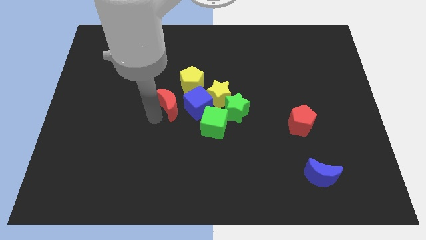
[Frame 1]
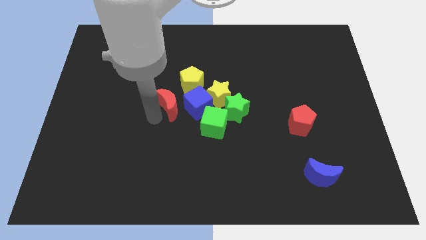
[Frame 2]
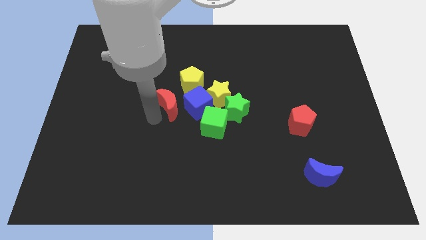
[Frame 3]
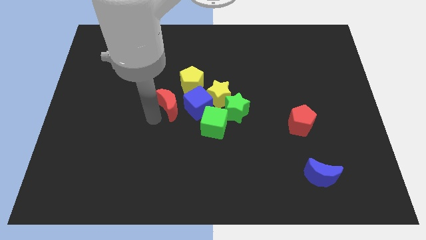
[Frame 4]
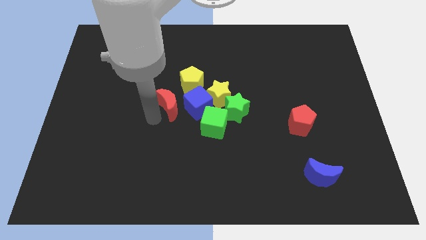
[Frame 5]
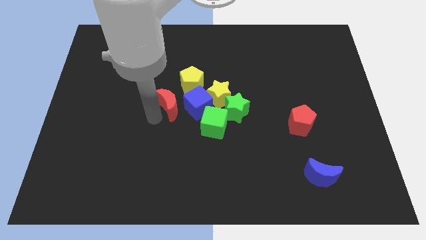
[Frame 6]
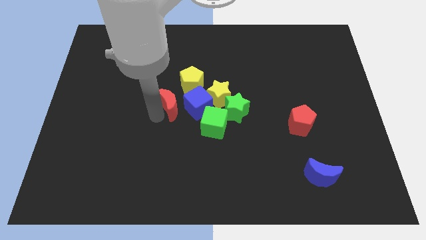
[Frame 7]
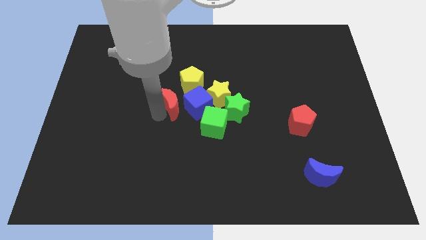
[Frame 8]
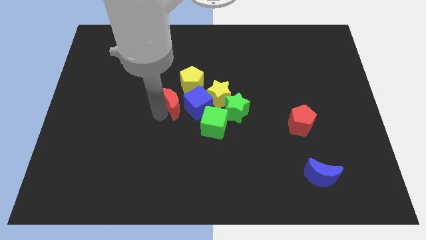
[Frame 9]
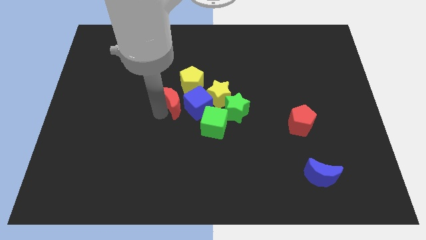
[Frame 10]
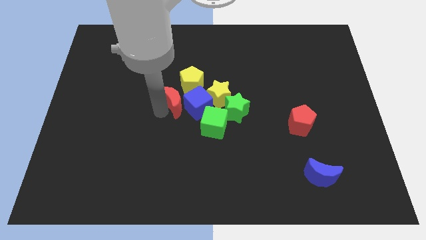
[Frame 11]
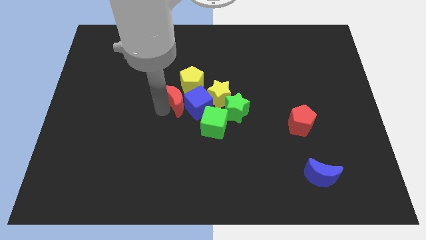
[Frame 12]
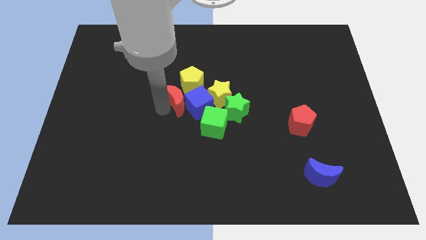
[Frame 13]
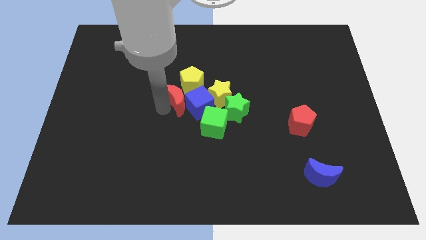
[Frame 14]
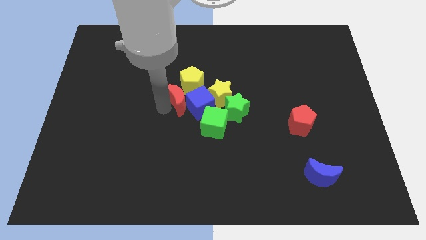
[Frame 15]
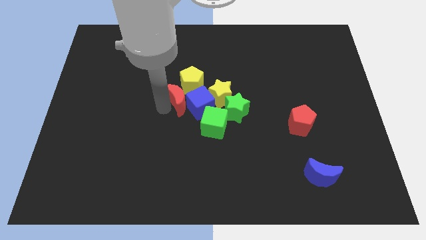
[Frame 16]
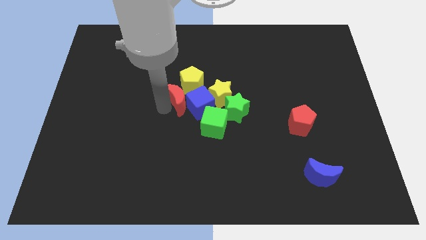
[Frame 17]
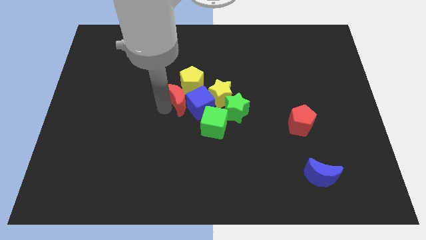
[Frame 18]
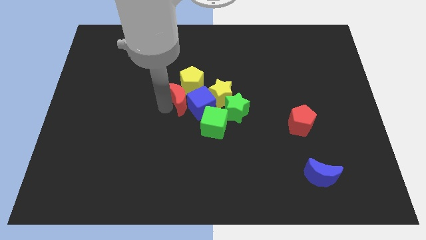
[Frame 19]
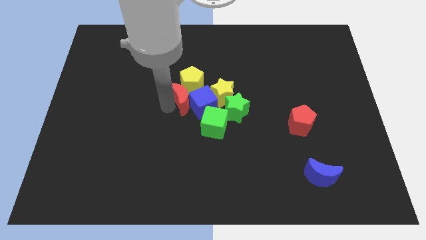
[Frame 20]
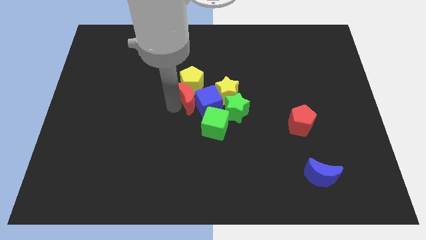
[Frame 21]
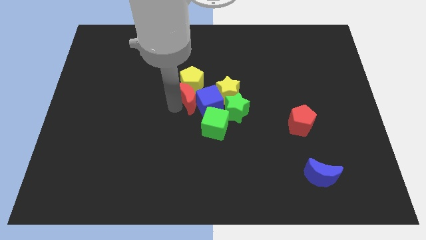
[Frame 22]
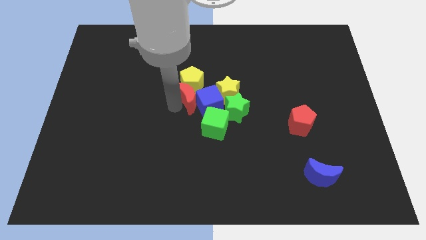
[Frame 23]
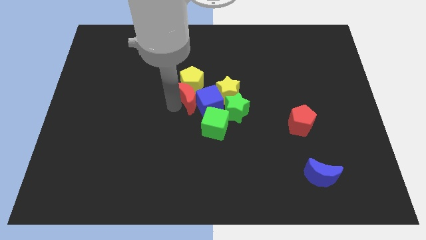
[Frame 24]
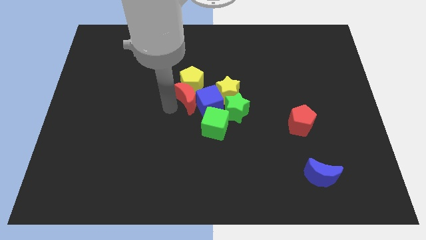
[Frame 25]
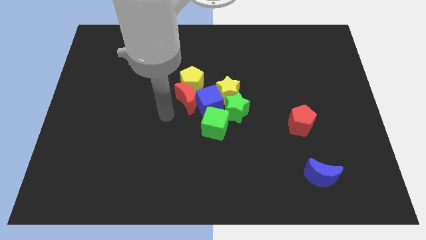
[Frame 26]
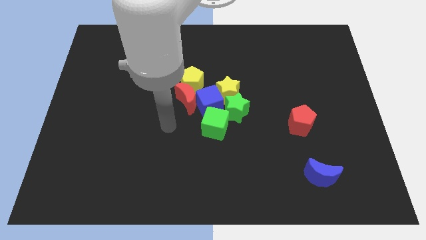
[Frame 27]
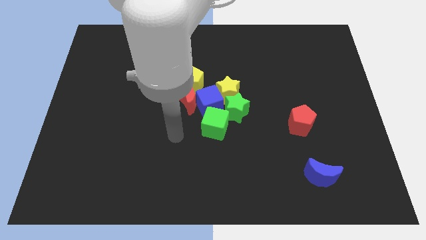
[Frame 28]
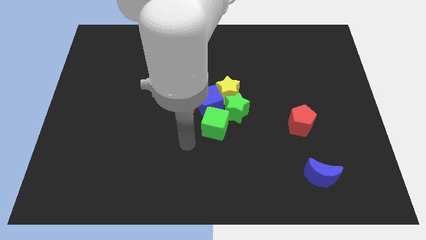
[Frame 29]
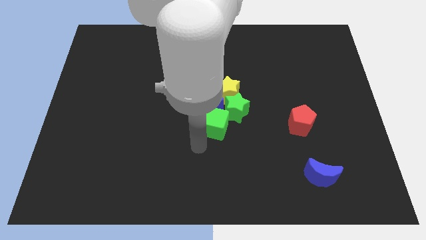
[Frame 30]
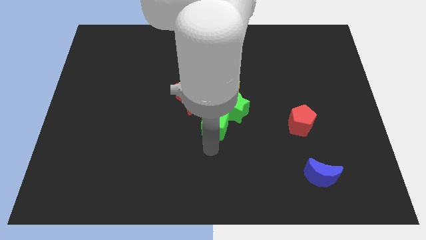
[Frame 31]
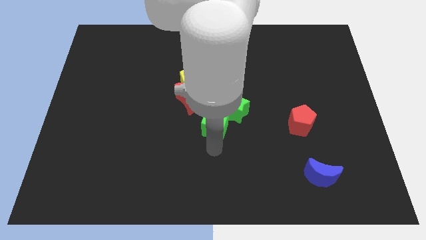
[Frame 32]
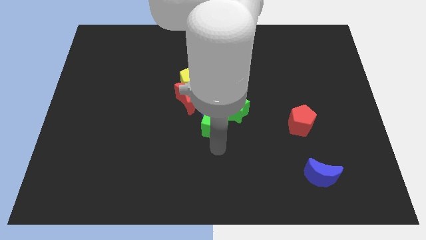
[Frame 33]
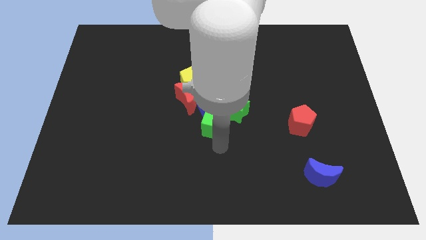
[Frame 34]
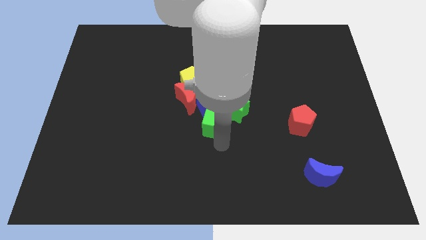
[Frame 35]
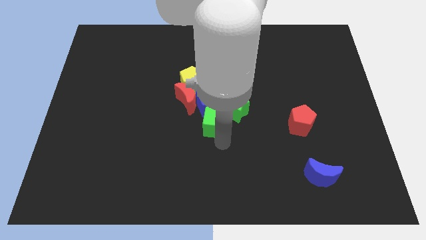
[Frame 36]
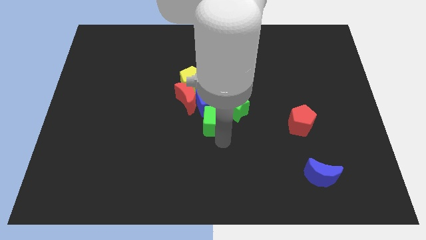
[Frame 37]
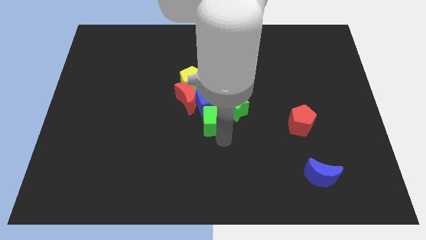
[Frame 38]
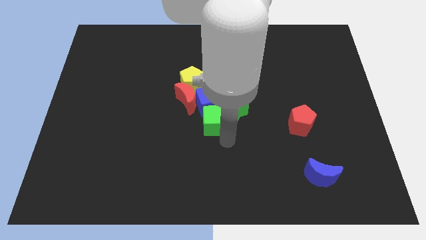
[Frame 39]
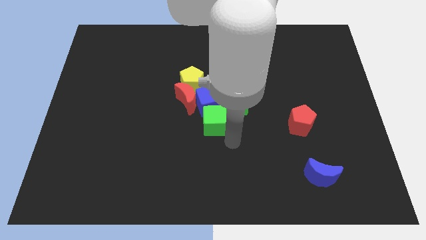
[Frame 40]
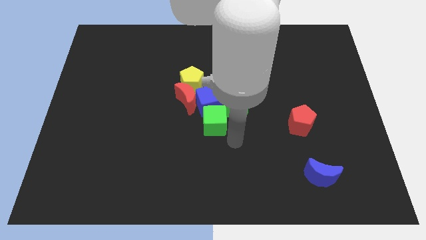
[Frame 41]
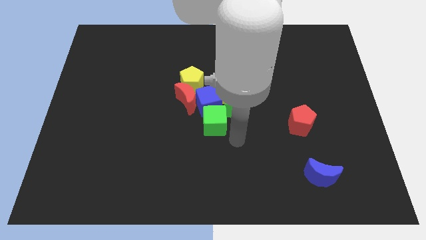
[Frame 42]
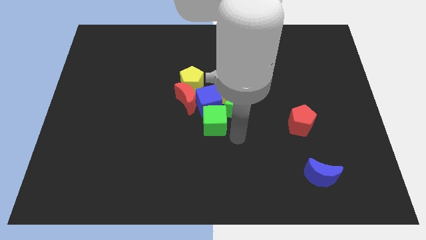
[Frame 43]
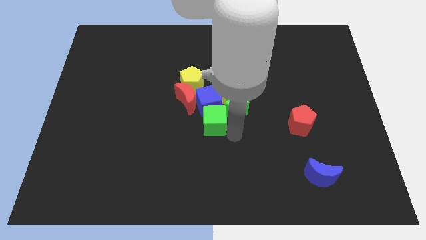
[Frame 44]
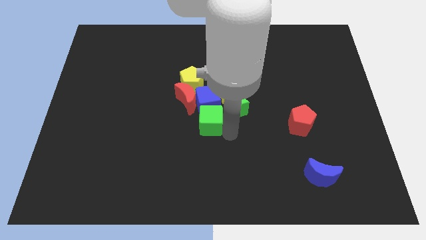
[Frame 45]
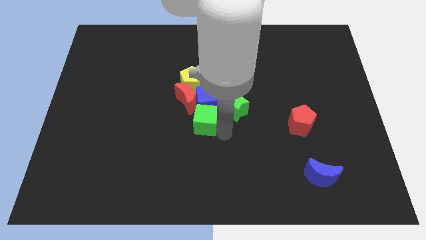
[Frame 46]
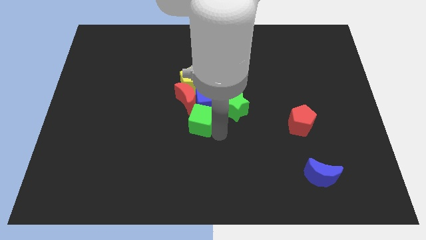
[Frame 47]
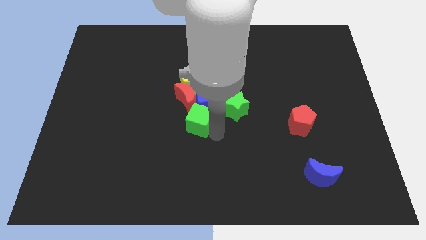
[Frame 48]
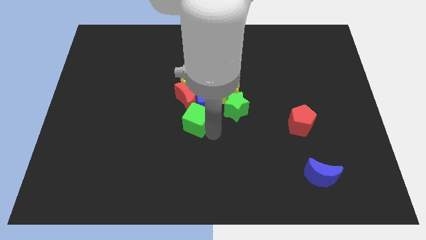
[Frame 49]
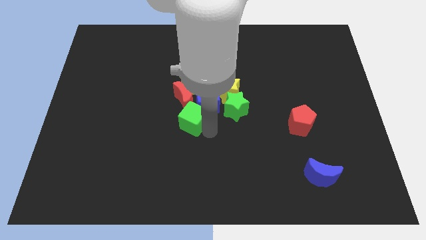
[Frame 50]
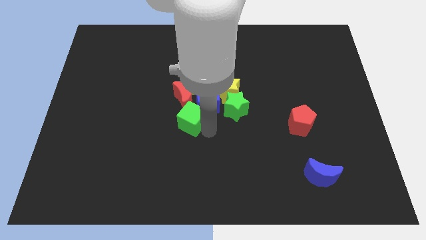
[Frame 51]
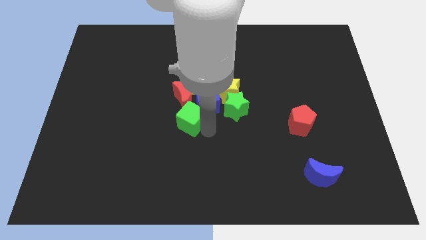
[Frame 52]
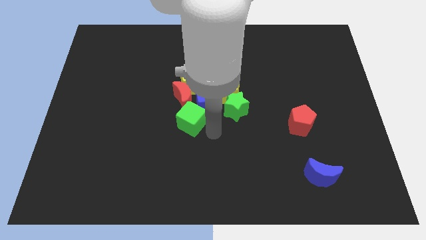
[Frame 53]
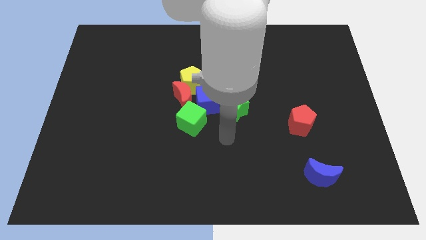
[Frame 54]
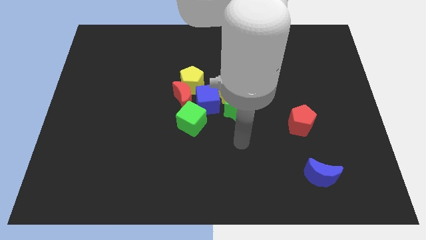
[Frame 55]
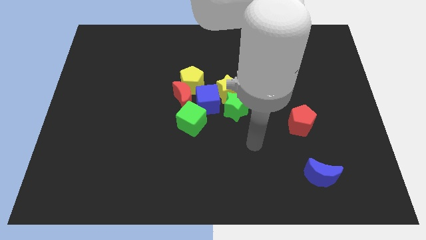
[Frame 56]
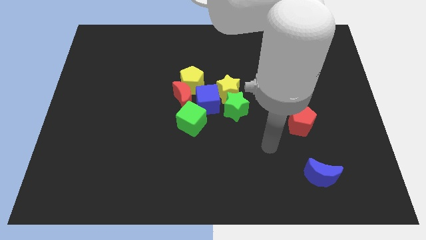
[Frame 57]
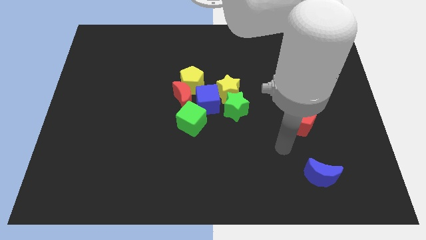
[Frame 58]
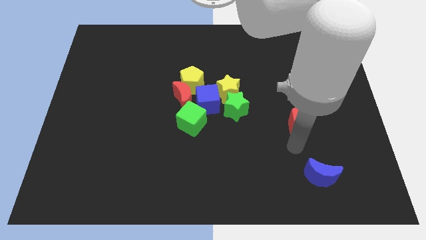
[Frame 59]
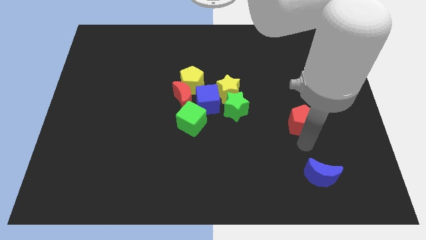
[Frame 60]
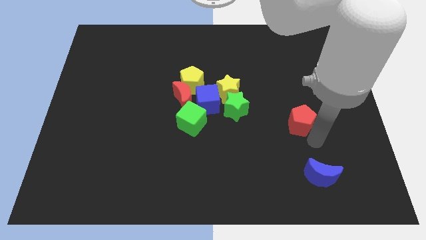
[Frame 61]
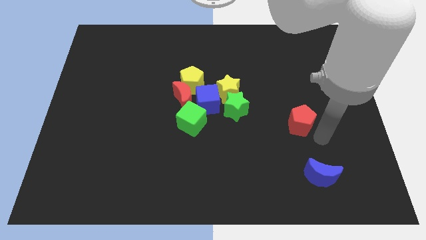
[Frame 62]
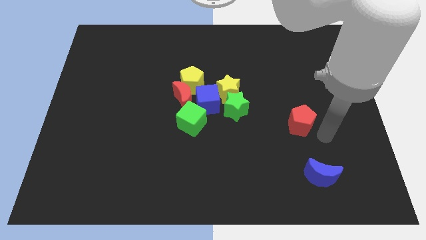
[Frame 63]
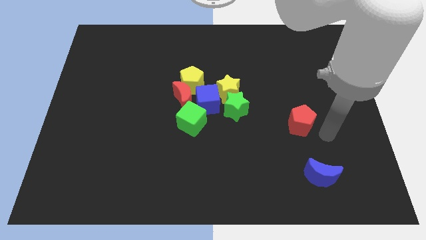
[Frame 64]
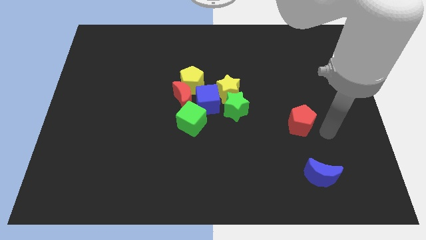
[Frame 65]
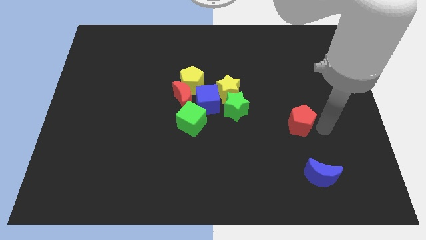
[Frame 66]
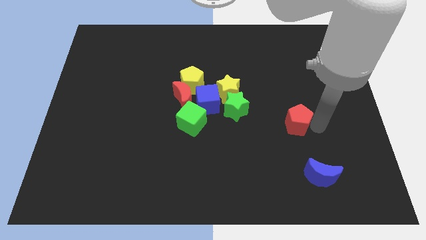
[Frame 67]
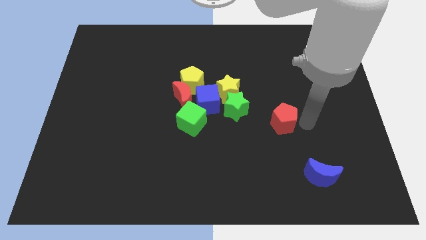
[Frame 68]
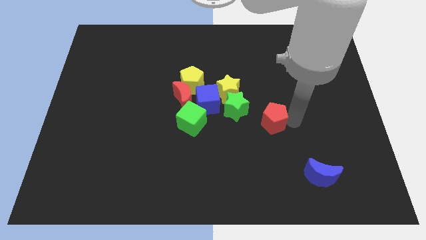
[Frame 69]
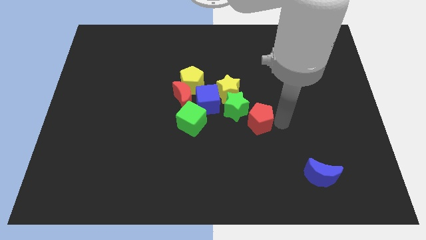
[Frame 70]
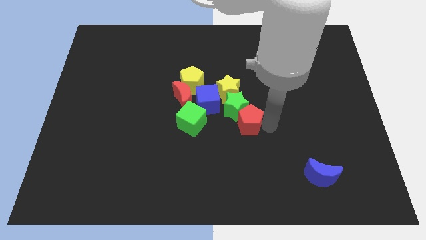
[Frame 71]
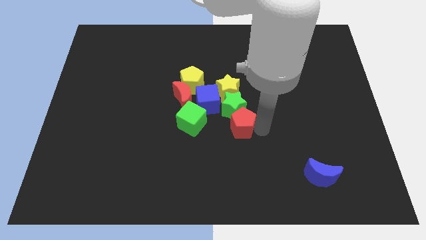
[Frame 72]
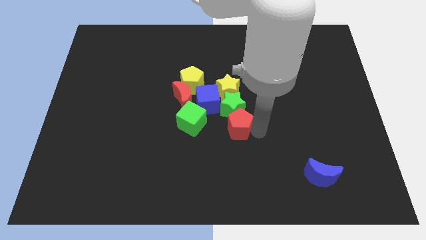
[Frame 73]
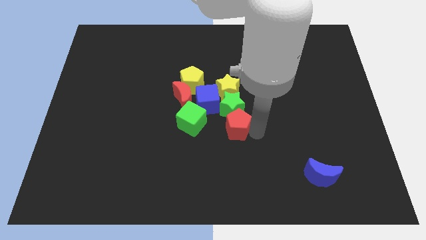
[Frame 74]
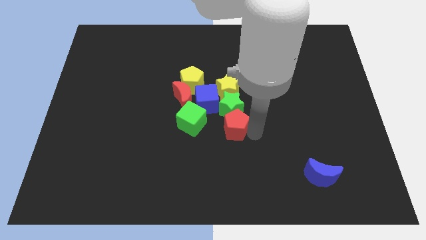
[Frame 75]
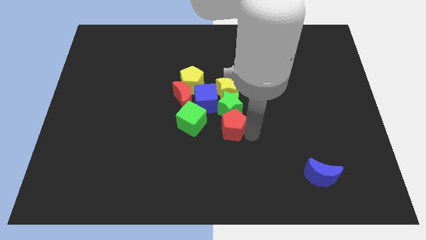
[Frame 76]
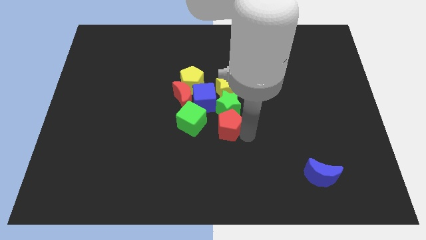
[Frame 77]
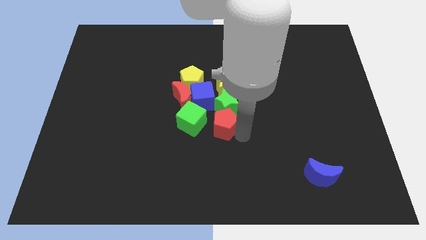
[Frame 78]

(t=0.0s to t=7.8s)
push the red blocks to the center of the board

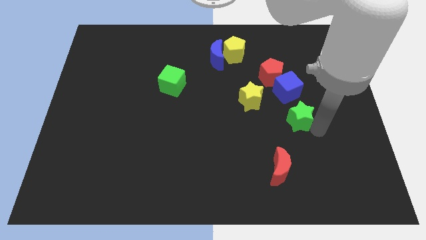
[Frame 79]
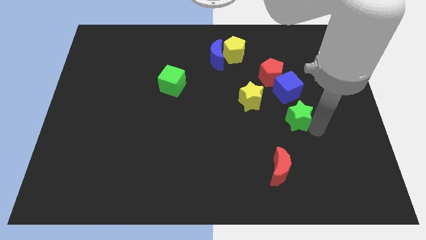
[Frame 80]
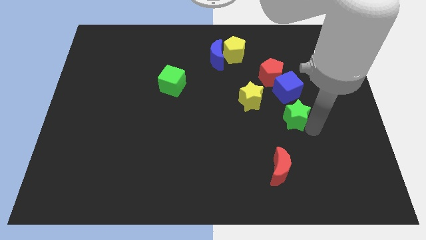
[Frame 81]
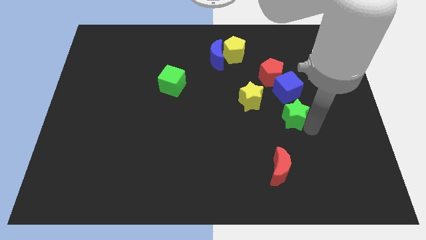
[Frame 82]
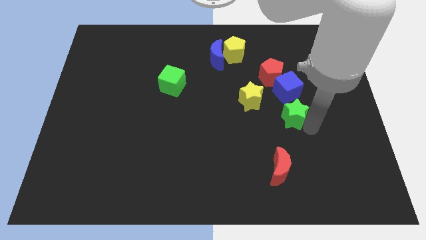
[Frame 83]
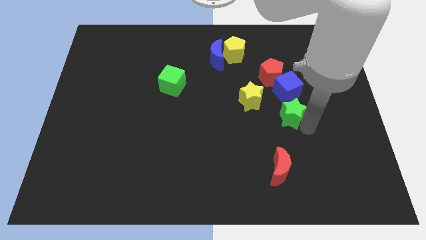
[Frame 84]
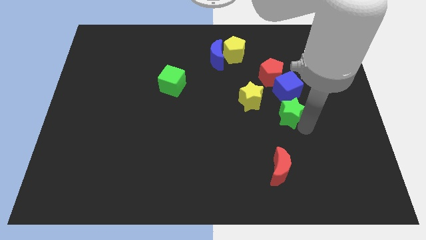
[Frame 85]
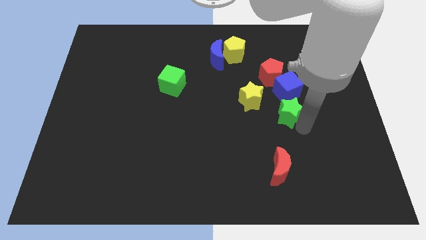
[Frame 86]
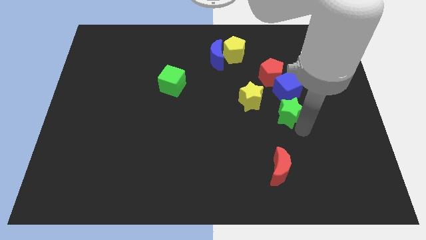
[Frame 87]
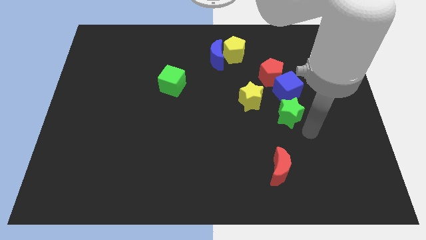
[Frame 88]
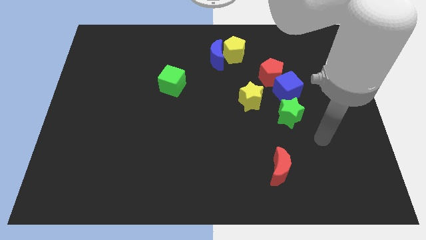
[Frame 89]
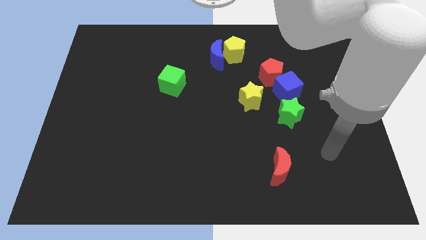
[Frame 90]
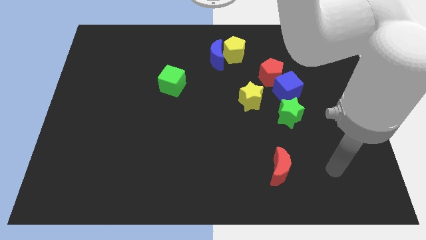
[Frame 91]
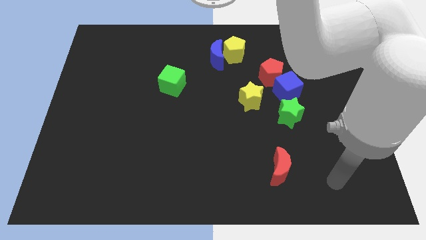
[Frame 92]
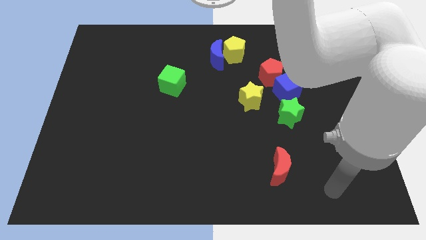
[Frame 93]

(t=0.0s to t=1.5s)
place the green star below the blue cube

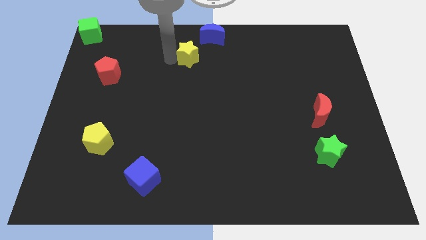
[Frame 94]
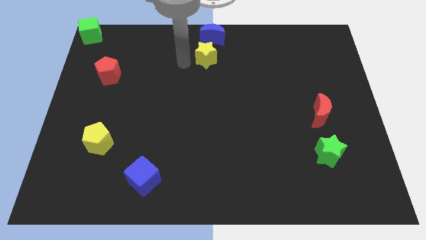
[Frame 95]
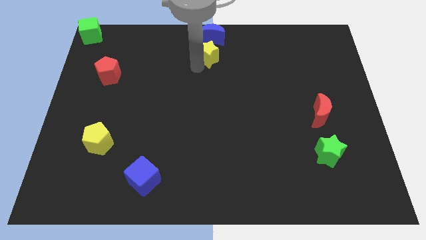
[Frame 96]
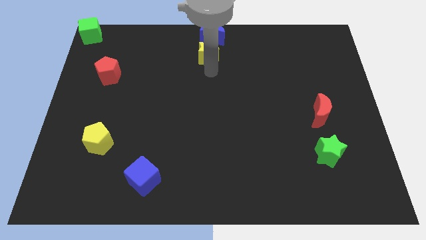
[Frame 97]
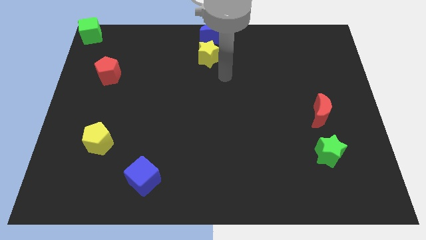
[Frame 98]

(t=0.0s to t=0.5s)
push the yellow star below the blue crescent
